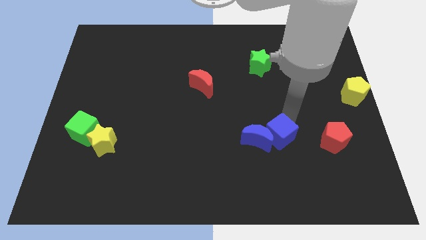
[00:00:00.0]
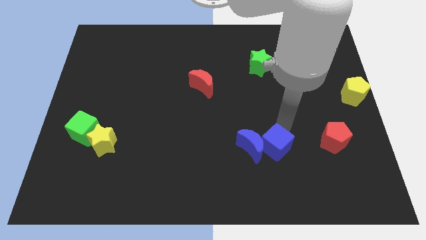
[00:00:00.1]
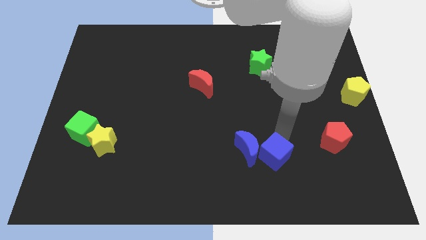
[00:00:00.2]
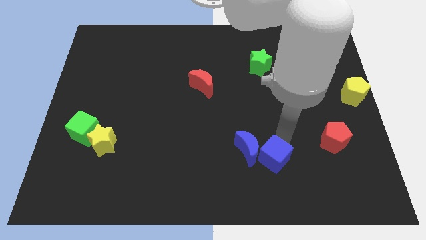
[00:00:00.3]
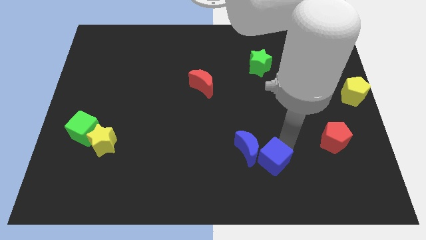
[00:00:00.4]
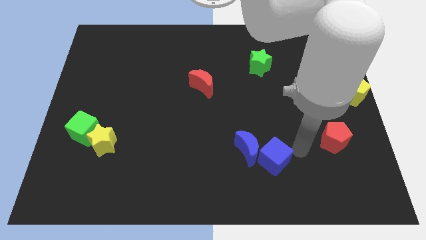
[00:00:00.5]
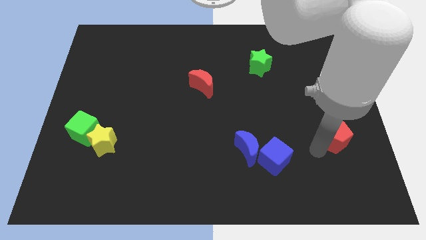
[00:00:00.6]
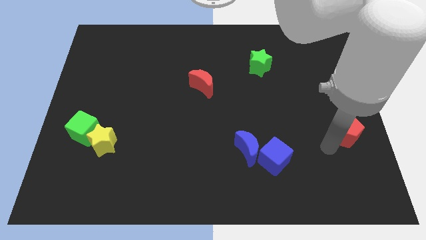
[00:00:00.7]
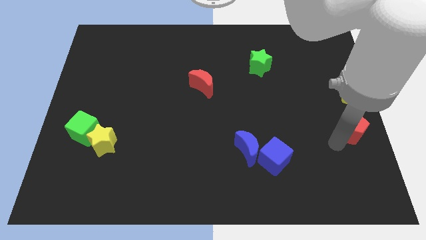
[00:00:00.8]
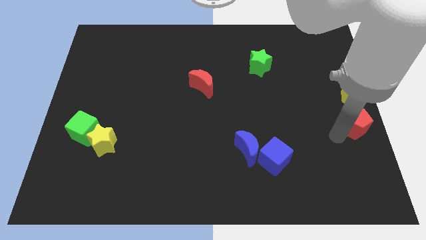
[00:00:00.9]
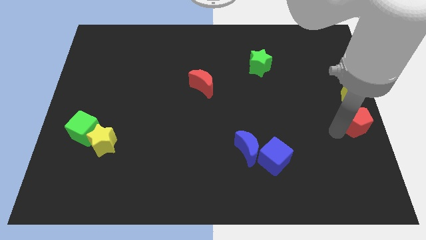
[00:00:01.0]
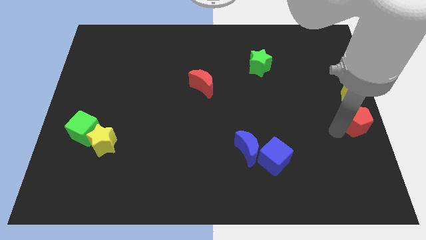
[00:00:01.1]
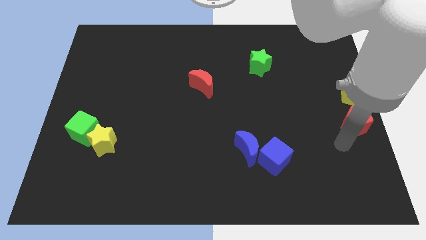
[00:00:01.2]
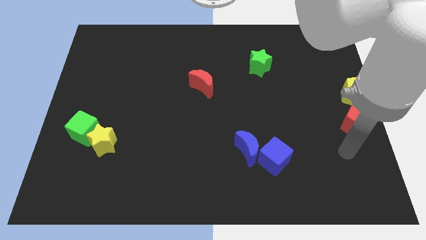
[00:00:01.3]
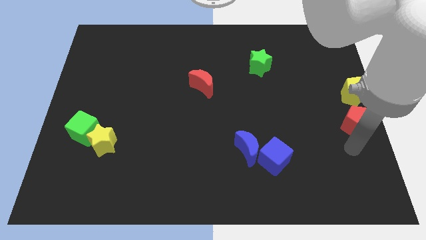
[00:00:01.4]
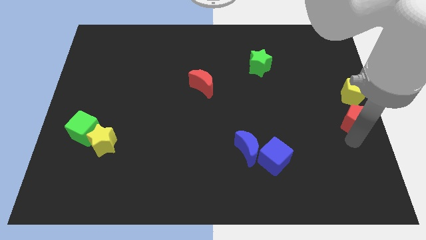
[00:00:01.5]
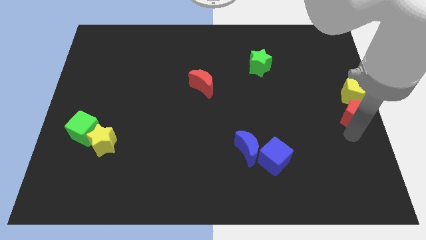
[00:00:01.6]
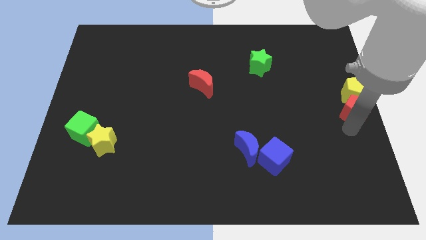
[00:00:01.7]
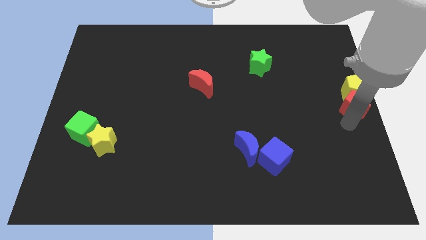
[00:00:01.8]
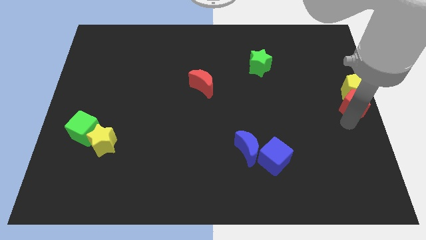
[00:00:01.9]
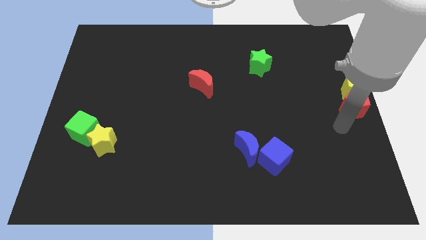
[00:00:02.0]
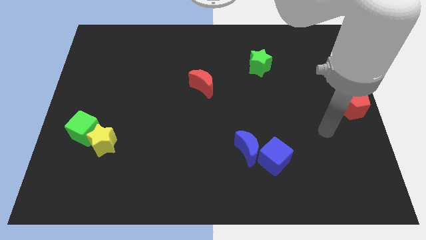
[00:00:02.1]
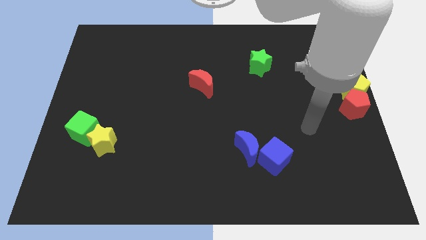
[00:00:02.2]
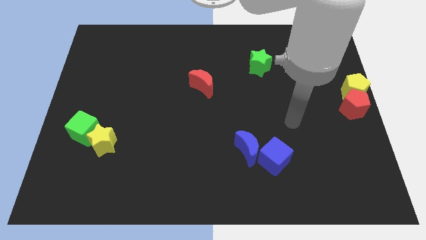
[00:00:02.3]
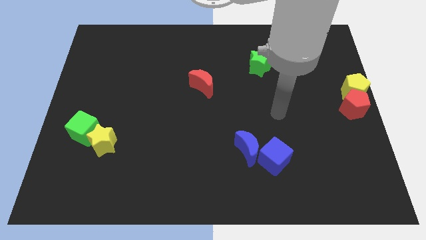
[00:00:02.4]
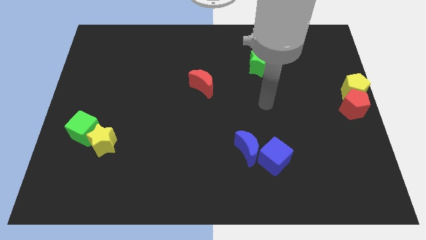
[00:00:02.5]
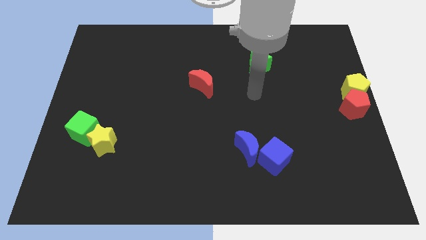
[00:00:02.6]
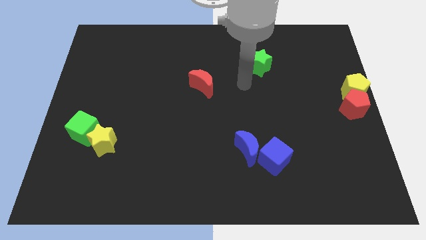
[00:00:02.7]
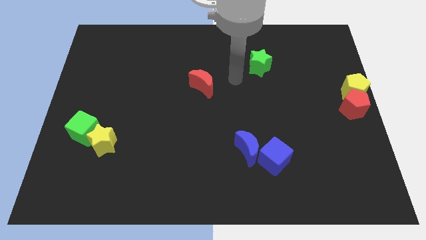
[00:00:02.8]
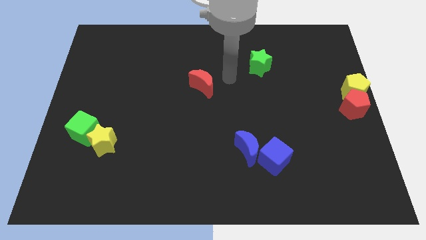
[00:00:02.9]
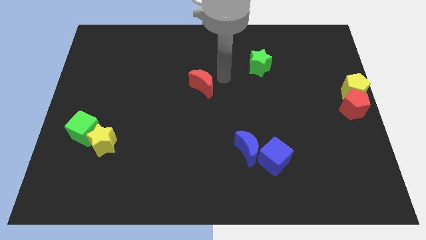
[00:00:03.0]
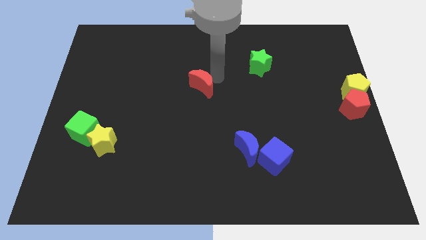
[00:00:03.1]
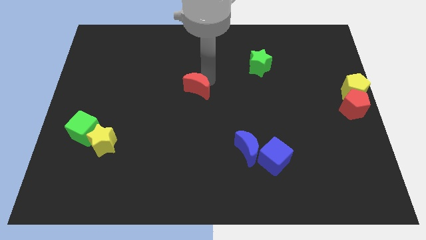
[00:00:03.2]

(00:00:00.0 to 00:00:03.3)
push the red pentagon into the bottom of the yellow pentagon

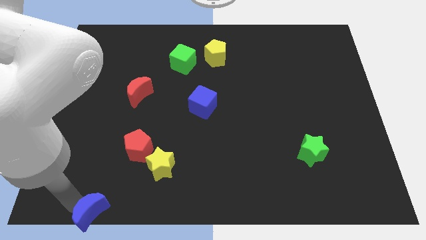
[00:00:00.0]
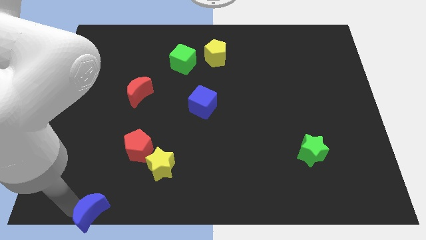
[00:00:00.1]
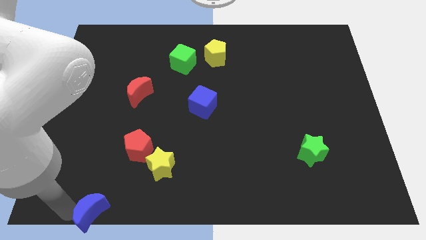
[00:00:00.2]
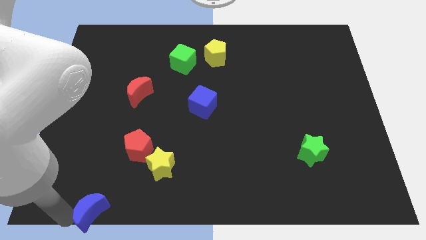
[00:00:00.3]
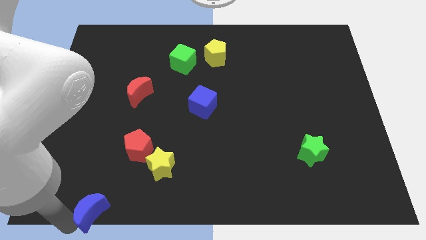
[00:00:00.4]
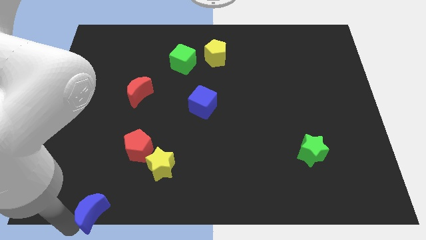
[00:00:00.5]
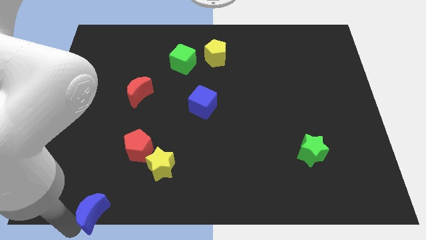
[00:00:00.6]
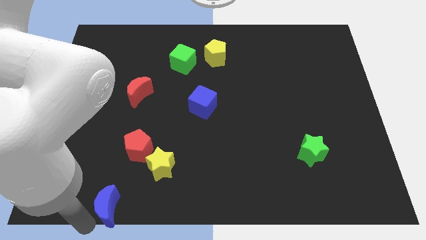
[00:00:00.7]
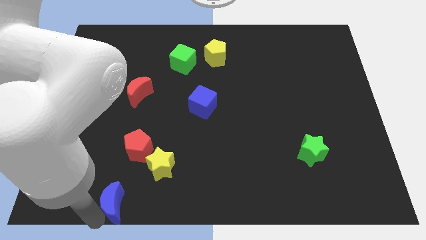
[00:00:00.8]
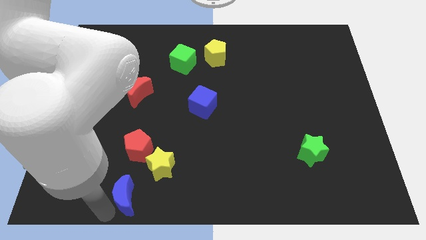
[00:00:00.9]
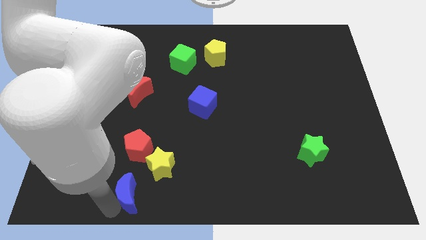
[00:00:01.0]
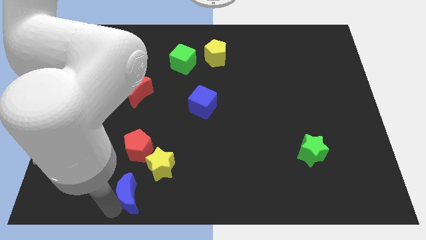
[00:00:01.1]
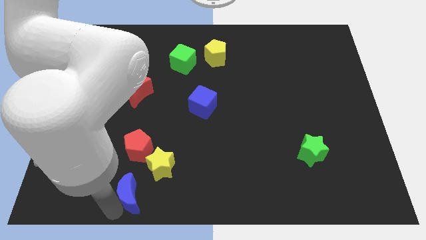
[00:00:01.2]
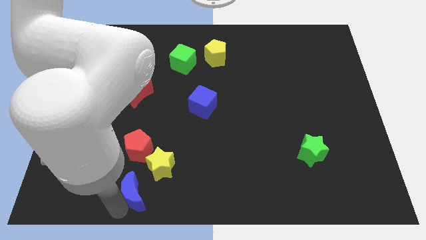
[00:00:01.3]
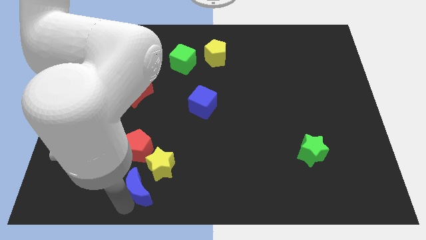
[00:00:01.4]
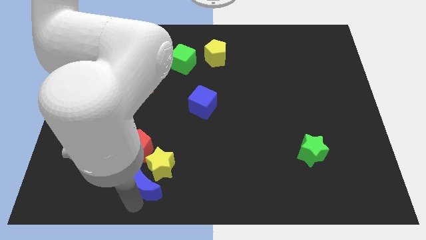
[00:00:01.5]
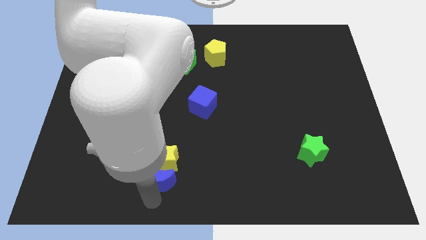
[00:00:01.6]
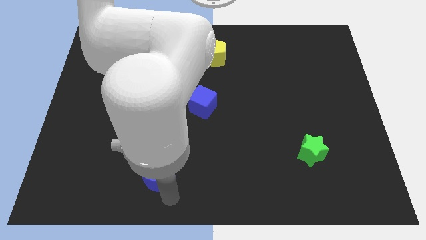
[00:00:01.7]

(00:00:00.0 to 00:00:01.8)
push the blue crescent into the yellow star

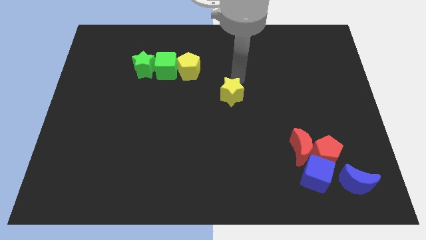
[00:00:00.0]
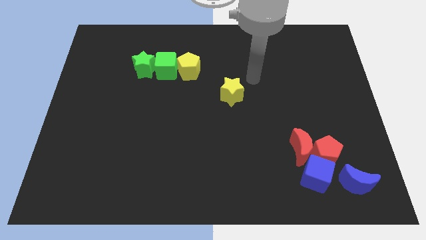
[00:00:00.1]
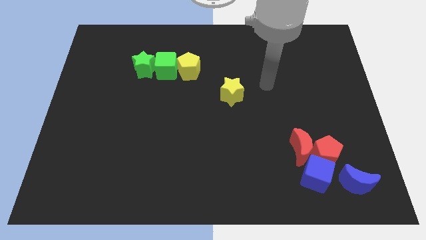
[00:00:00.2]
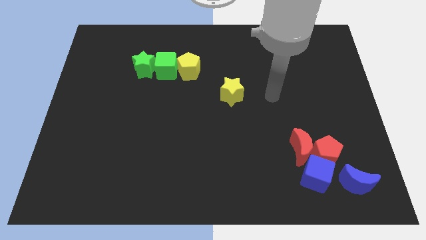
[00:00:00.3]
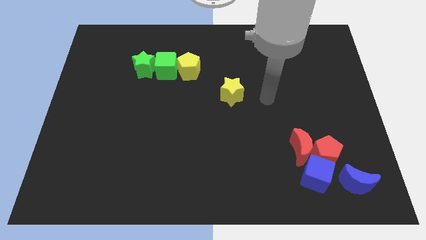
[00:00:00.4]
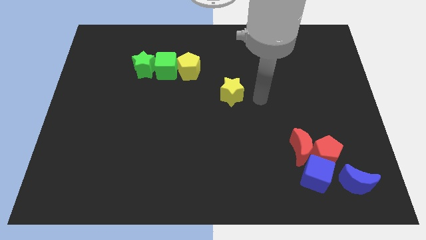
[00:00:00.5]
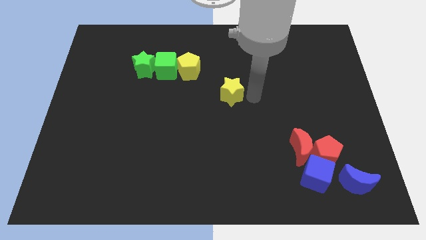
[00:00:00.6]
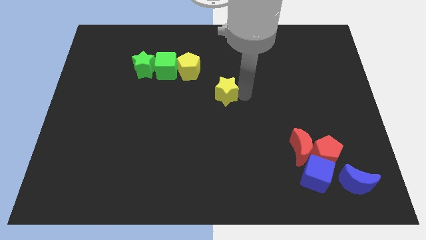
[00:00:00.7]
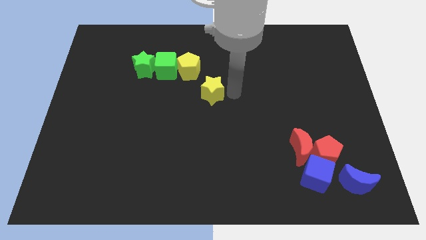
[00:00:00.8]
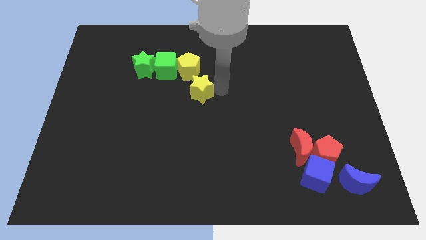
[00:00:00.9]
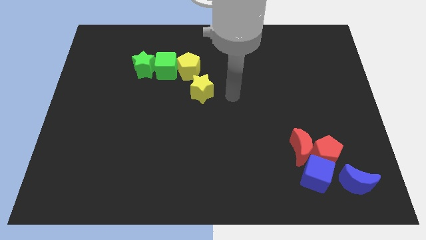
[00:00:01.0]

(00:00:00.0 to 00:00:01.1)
drag the yellow star towards the bottom side of the yellow pentagon

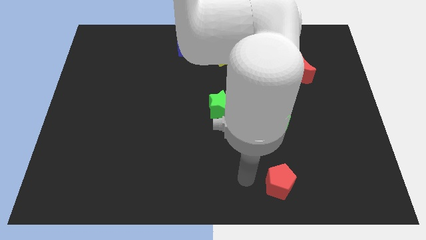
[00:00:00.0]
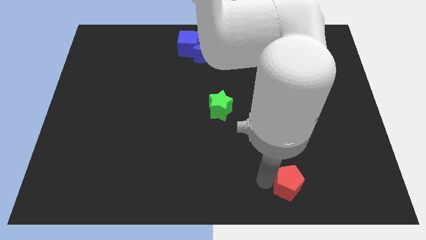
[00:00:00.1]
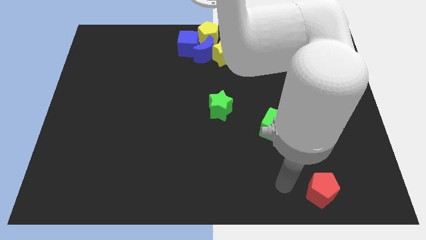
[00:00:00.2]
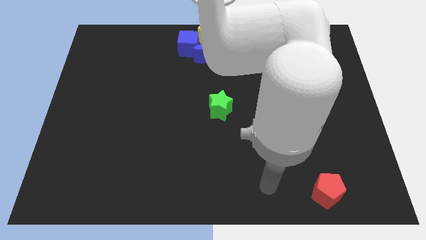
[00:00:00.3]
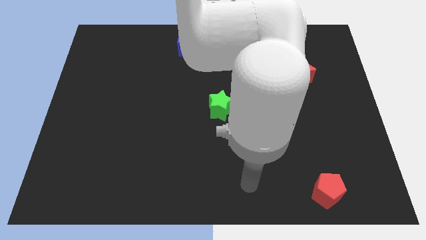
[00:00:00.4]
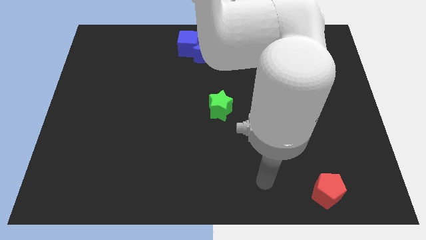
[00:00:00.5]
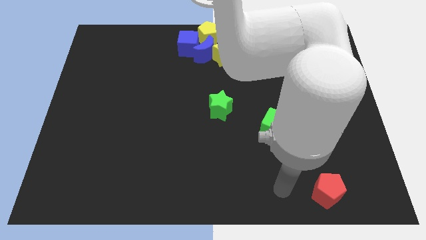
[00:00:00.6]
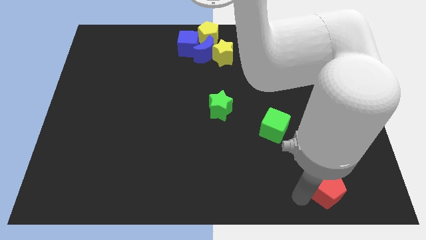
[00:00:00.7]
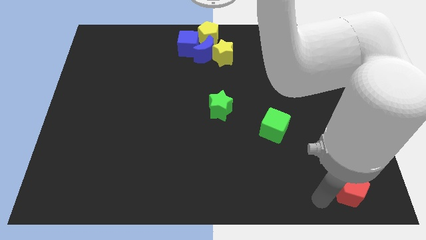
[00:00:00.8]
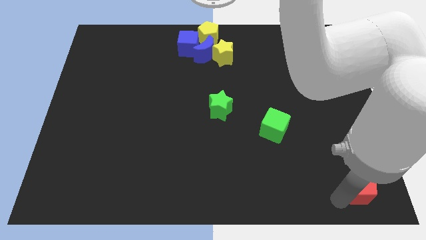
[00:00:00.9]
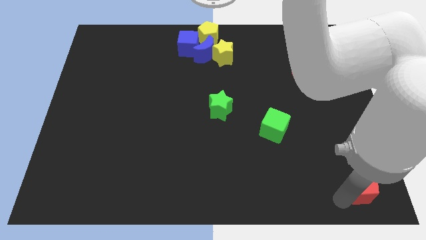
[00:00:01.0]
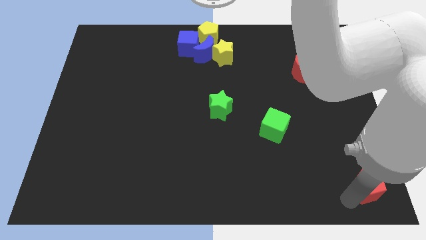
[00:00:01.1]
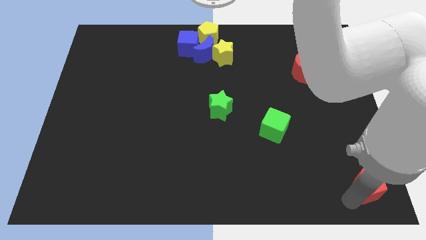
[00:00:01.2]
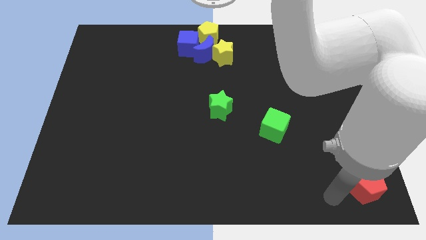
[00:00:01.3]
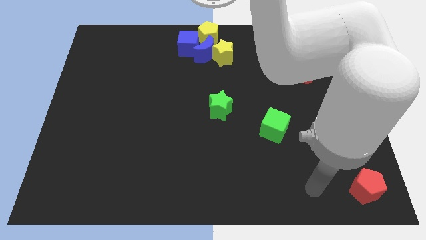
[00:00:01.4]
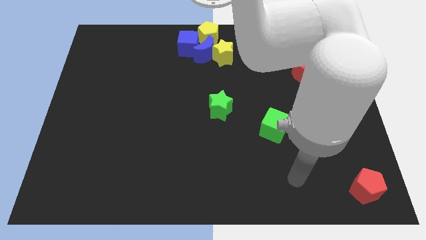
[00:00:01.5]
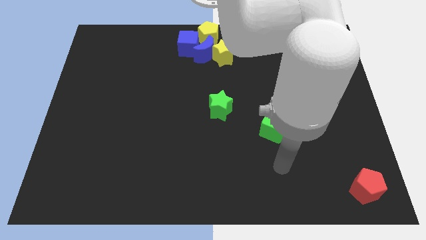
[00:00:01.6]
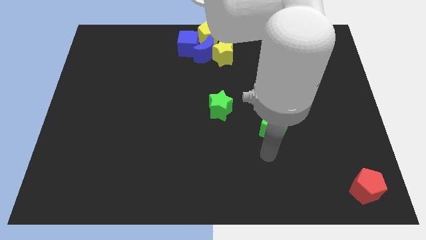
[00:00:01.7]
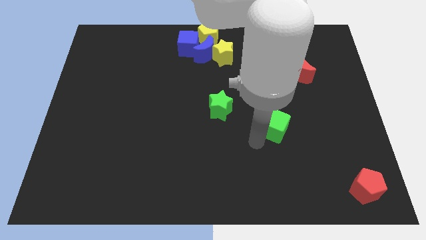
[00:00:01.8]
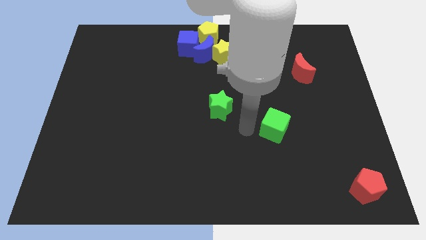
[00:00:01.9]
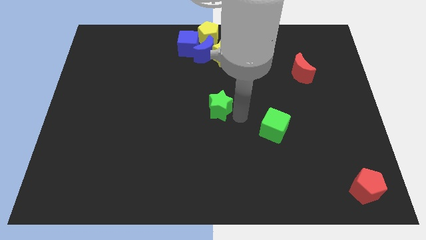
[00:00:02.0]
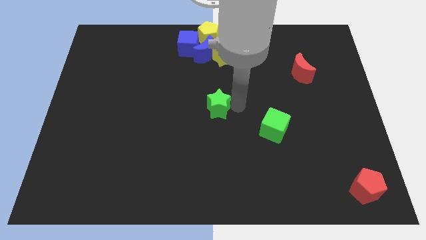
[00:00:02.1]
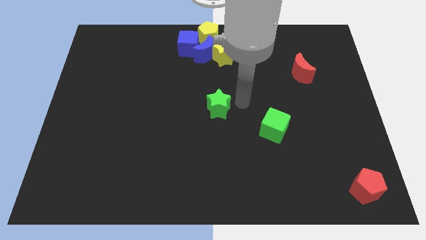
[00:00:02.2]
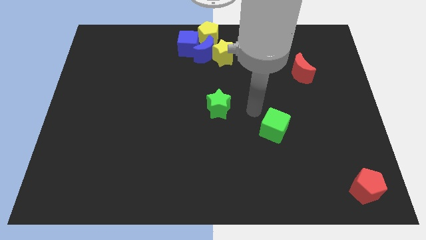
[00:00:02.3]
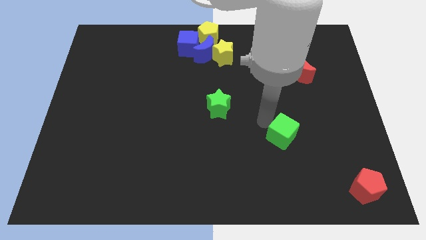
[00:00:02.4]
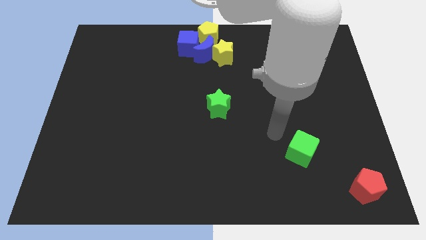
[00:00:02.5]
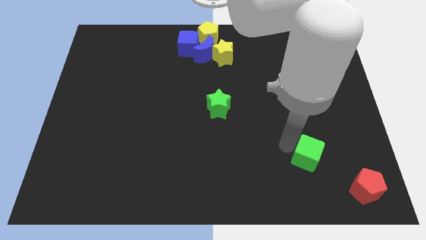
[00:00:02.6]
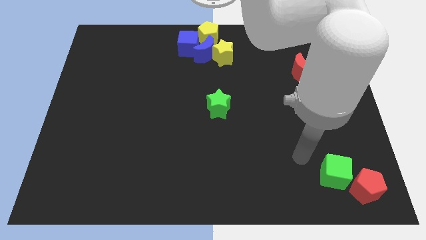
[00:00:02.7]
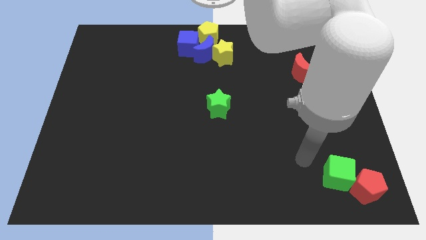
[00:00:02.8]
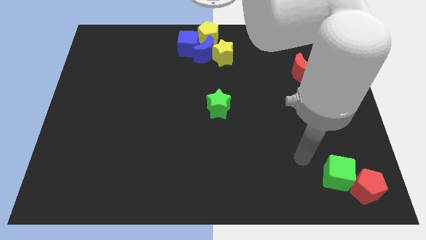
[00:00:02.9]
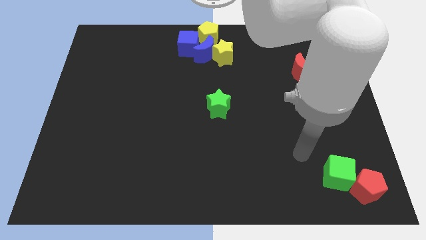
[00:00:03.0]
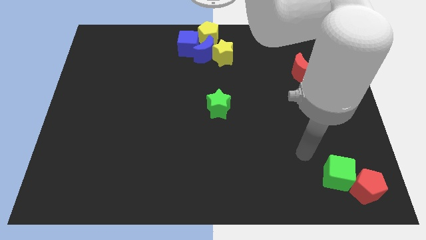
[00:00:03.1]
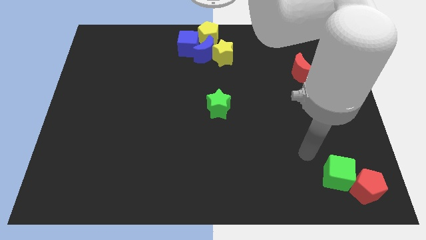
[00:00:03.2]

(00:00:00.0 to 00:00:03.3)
put the red pentagon and green cube at the bottom right corner of the board
